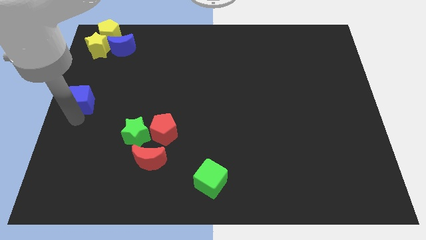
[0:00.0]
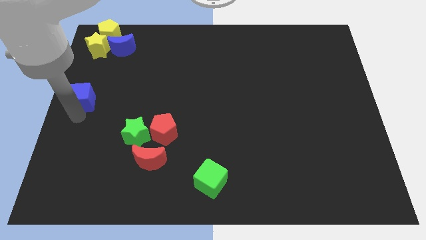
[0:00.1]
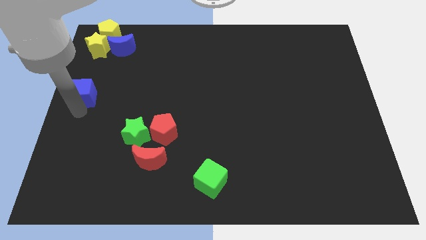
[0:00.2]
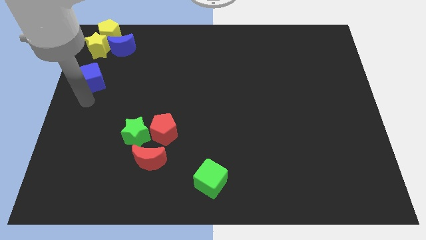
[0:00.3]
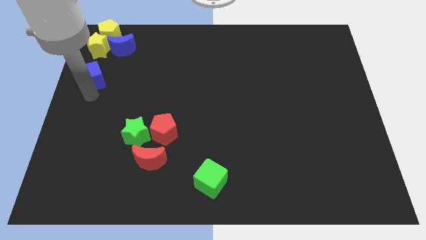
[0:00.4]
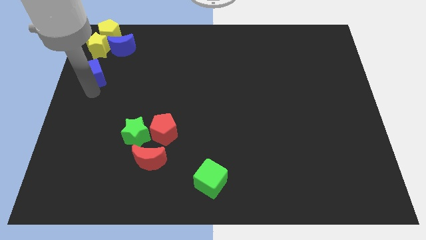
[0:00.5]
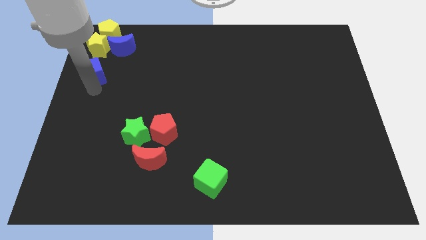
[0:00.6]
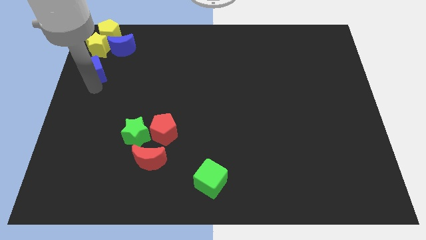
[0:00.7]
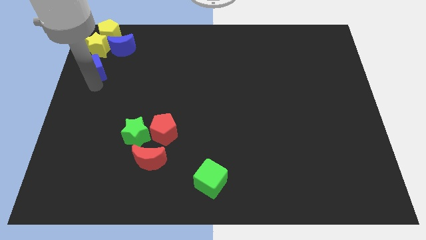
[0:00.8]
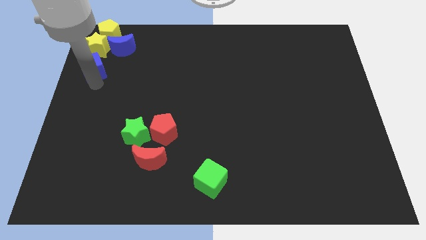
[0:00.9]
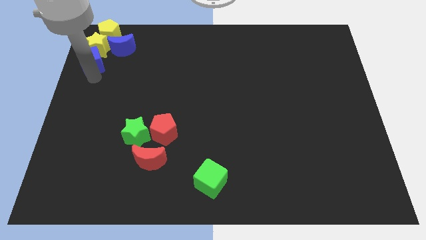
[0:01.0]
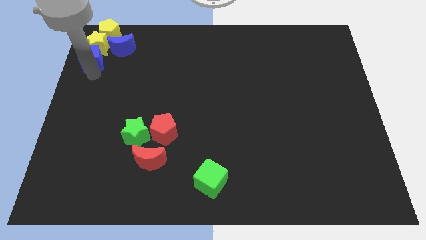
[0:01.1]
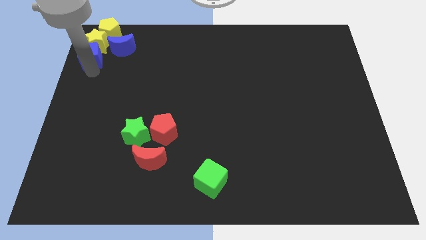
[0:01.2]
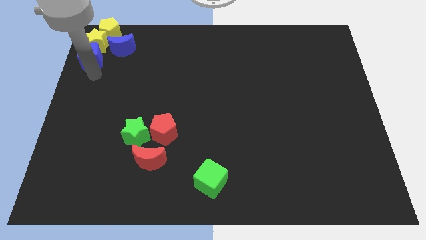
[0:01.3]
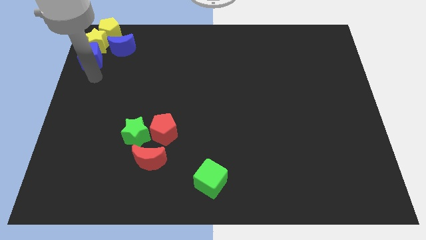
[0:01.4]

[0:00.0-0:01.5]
place the blue cube below the yellow star

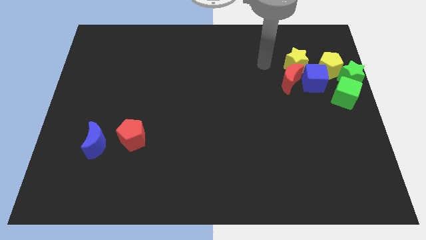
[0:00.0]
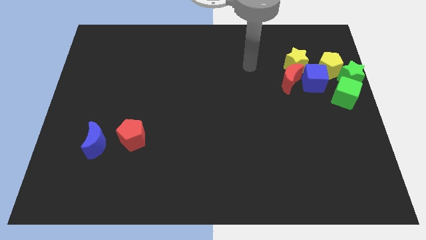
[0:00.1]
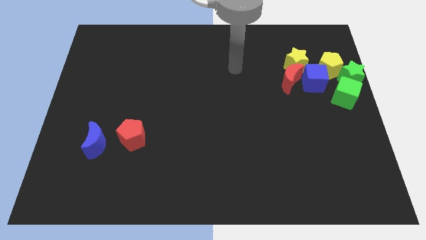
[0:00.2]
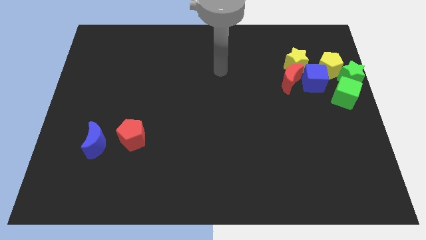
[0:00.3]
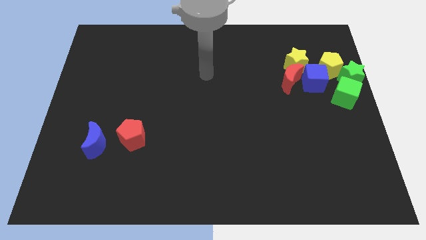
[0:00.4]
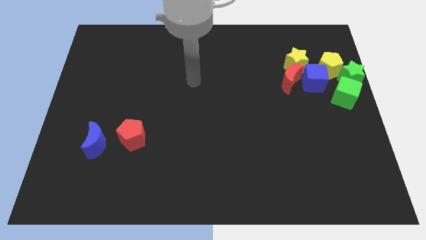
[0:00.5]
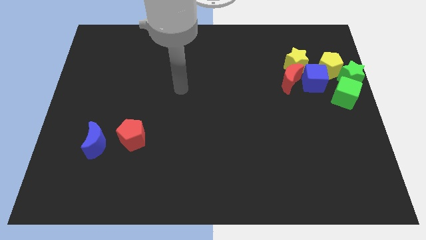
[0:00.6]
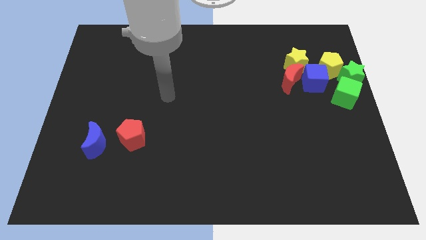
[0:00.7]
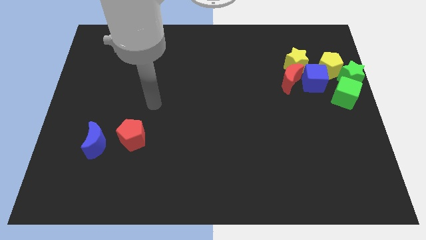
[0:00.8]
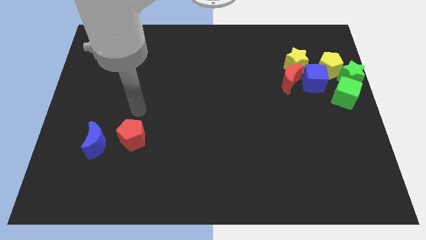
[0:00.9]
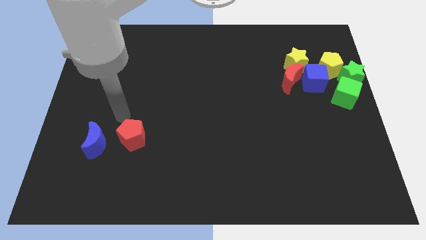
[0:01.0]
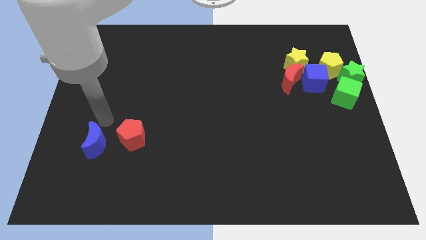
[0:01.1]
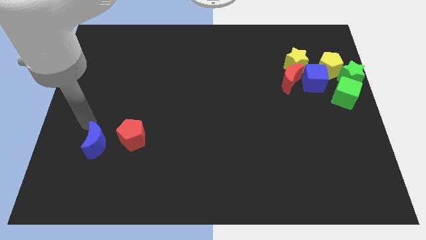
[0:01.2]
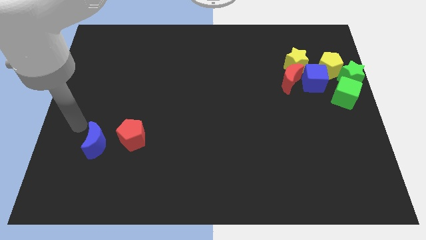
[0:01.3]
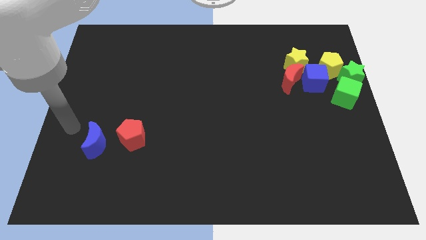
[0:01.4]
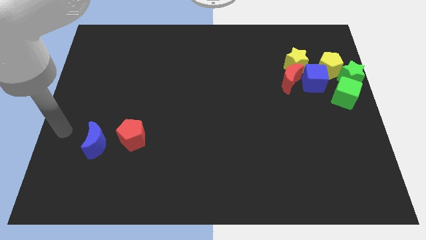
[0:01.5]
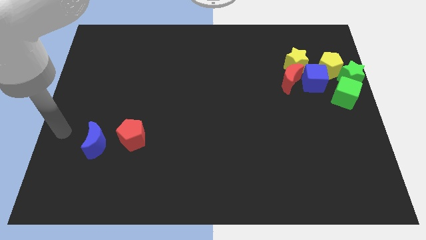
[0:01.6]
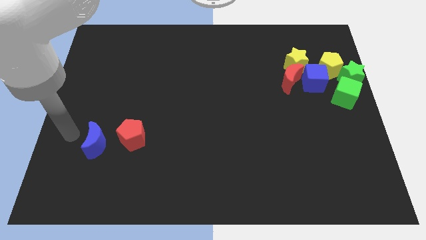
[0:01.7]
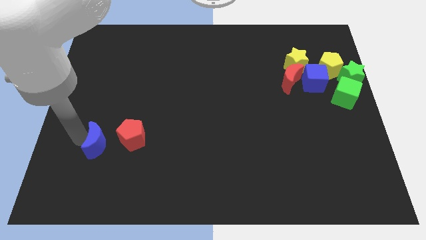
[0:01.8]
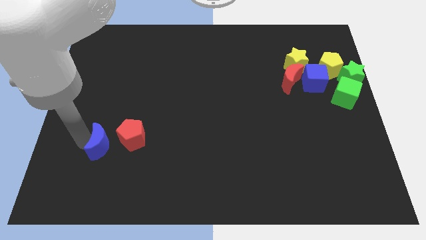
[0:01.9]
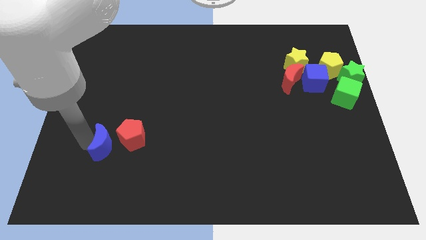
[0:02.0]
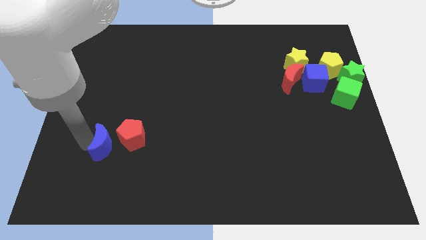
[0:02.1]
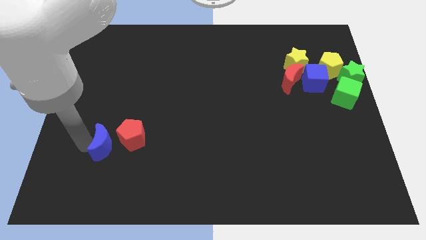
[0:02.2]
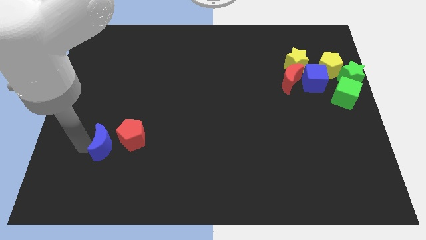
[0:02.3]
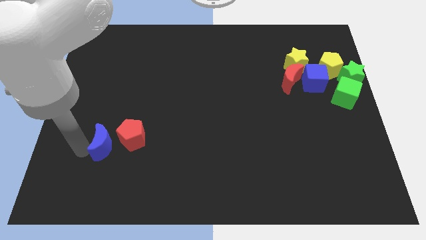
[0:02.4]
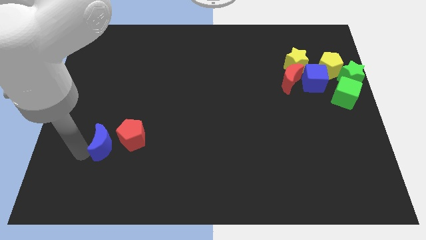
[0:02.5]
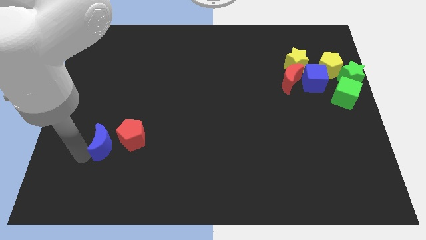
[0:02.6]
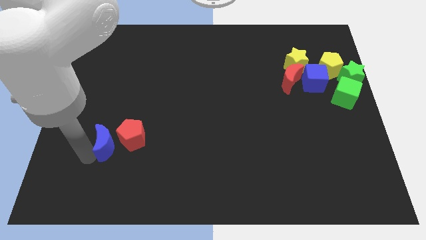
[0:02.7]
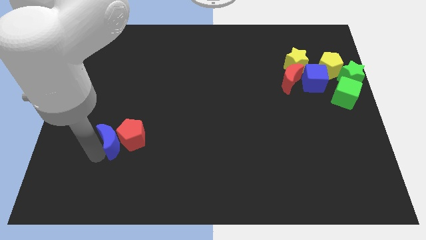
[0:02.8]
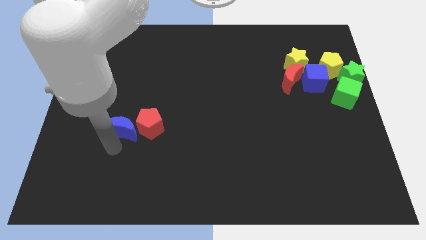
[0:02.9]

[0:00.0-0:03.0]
move the blue moon left to the red pentagon

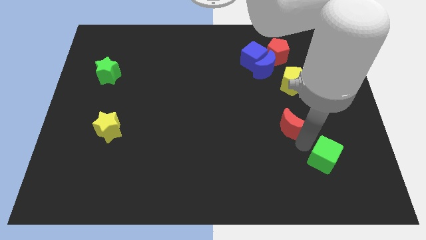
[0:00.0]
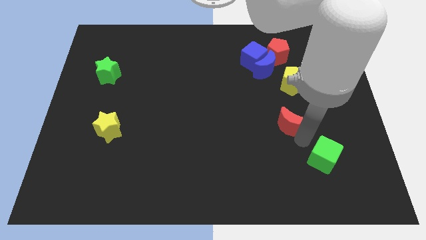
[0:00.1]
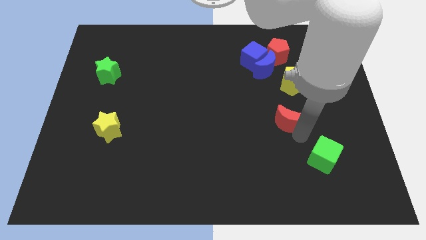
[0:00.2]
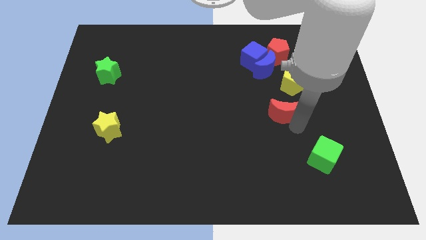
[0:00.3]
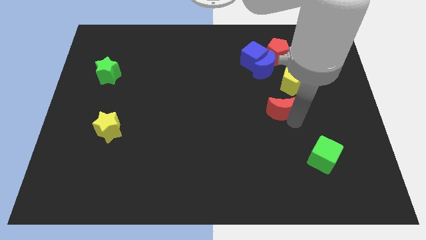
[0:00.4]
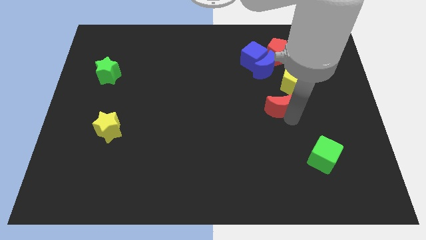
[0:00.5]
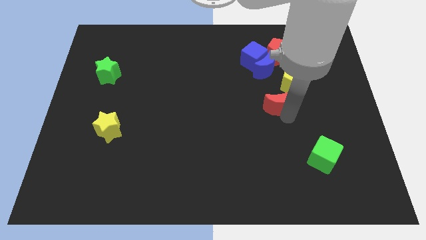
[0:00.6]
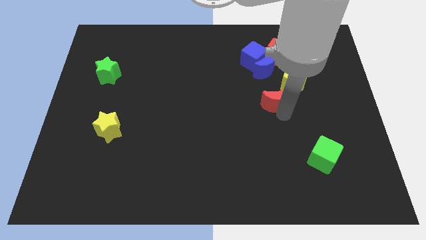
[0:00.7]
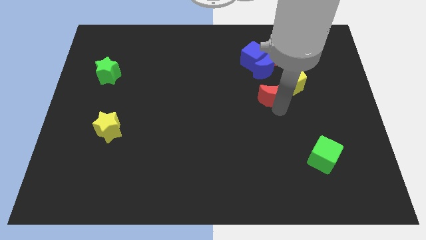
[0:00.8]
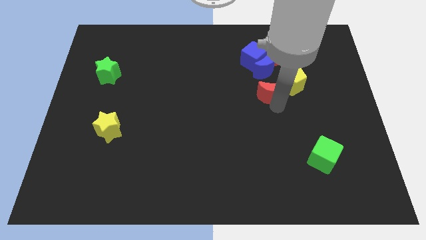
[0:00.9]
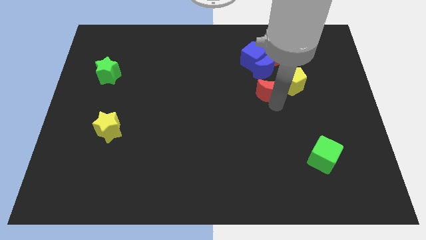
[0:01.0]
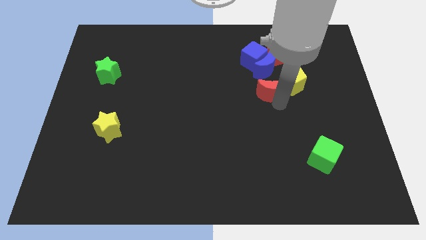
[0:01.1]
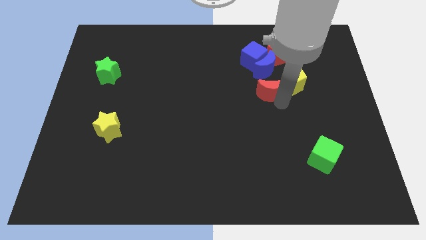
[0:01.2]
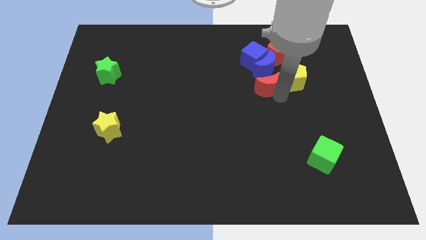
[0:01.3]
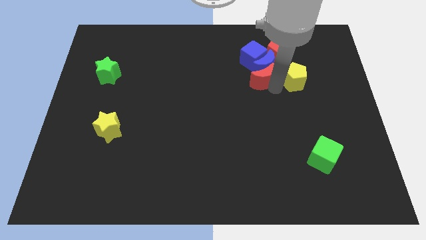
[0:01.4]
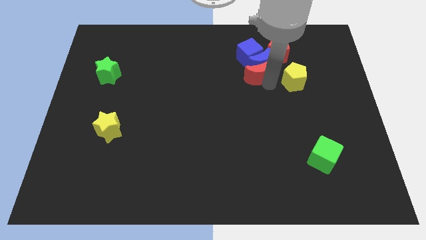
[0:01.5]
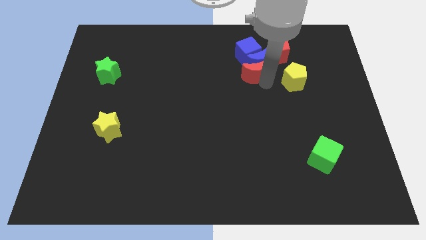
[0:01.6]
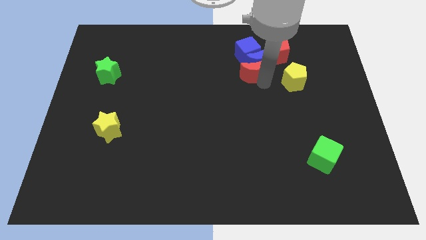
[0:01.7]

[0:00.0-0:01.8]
push the red crescent into blue crescent

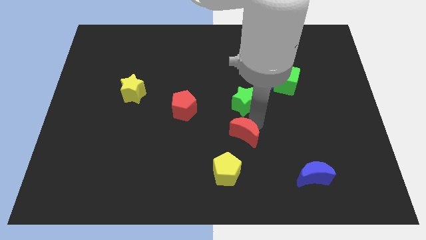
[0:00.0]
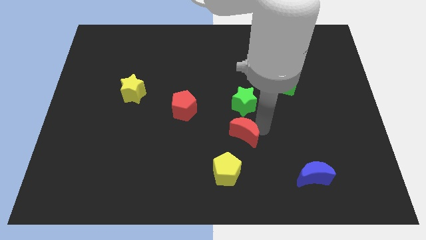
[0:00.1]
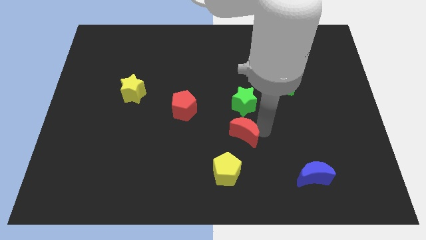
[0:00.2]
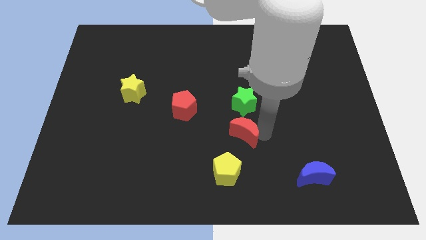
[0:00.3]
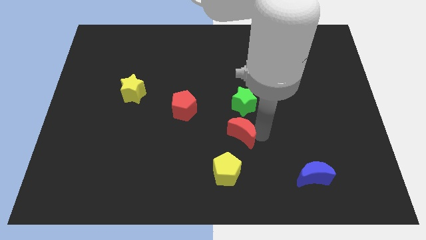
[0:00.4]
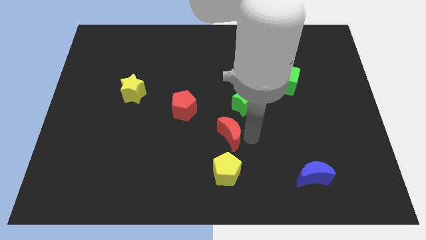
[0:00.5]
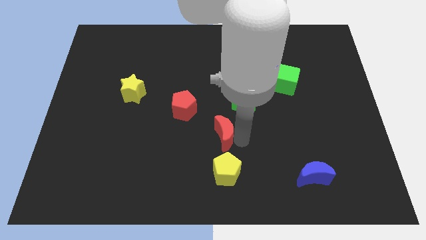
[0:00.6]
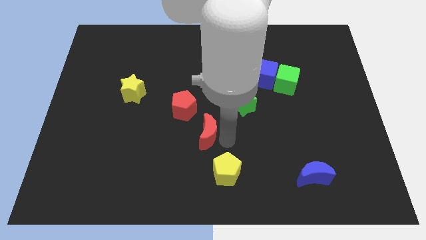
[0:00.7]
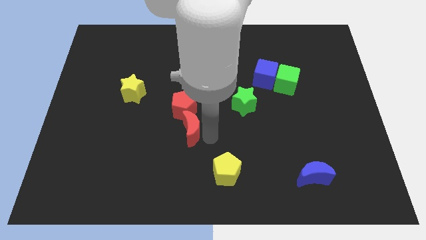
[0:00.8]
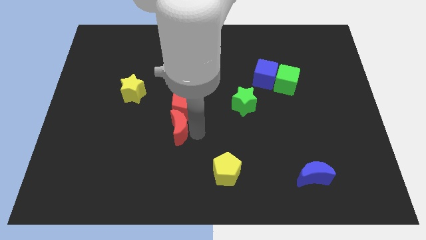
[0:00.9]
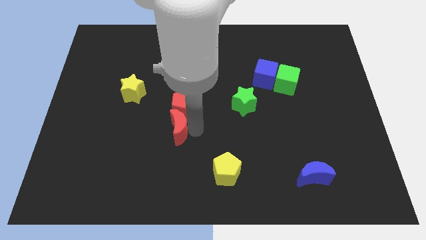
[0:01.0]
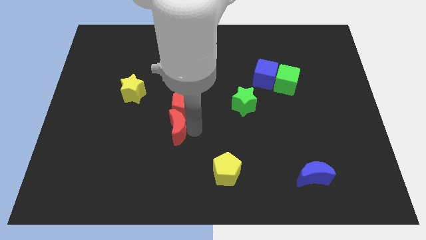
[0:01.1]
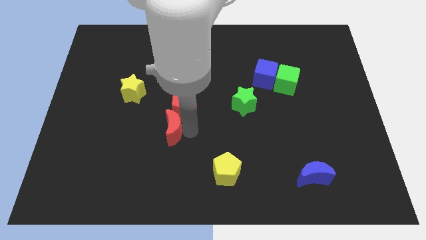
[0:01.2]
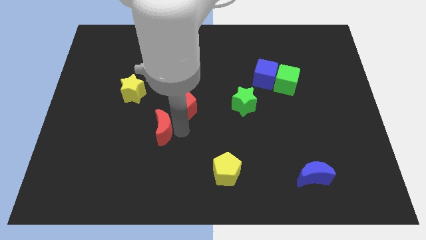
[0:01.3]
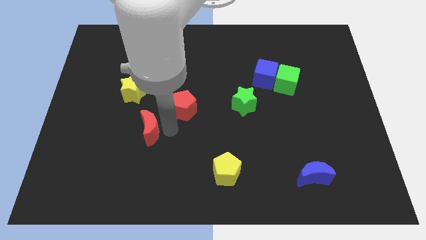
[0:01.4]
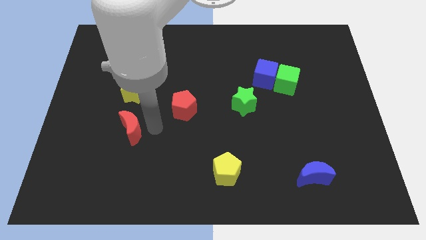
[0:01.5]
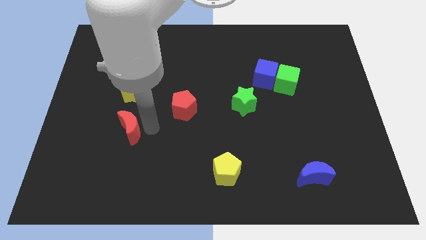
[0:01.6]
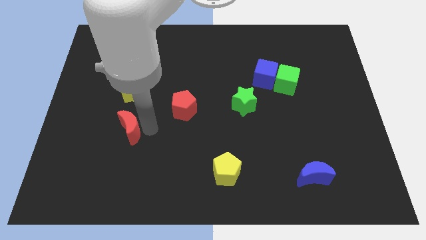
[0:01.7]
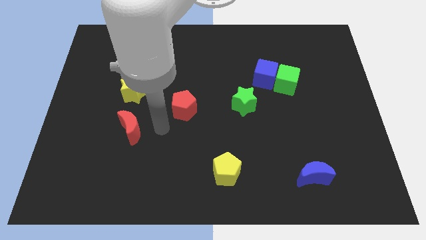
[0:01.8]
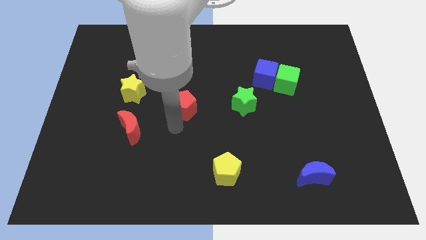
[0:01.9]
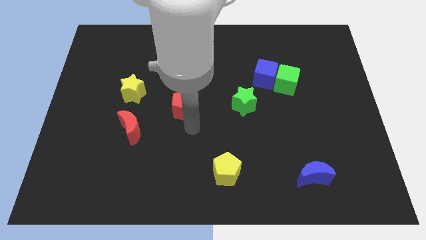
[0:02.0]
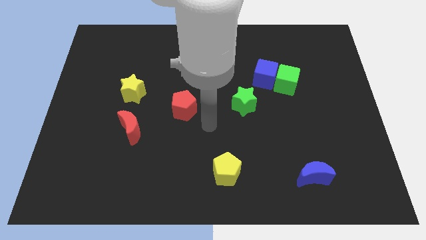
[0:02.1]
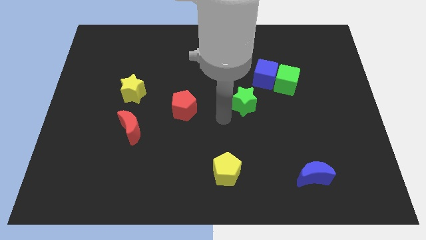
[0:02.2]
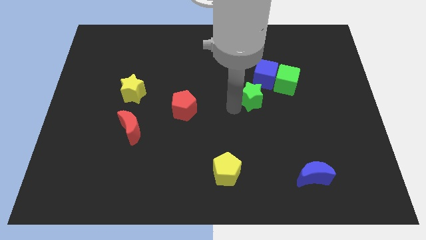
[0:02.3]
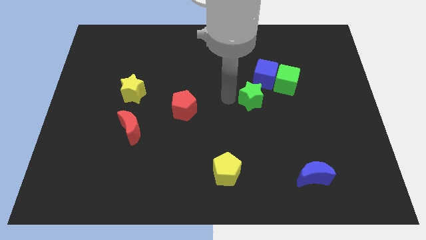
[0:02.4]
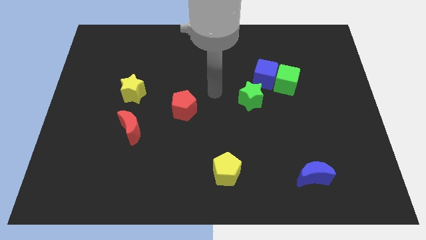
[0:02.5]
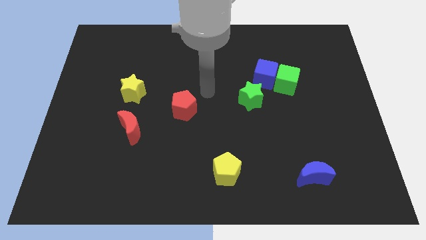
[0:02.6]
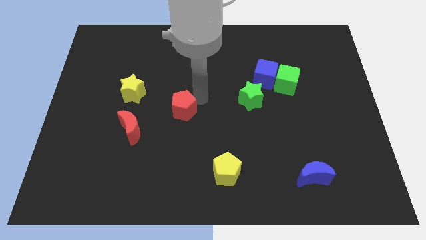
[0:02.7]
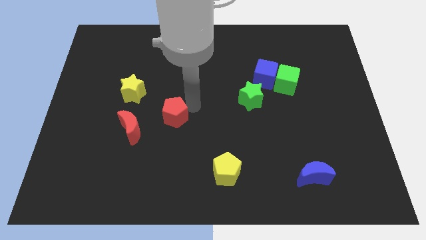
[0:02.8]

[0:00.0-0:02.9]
place the red moon below the yellow star
